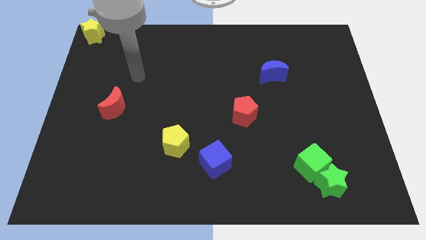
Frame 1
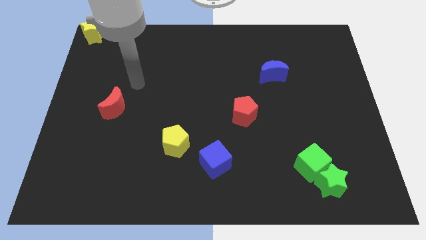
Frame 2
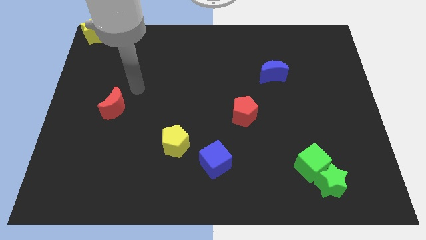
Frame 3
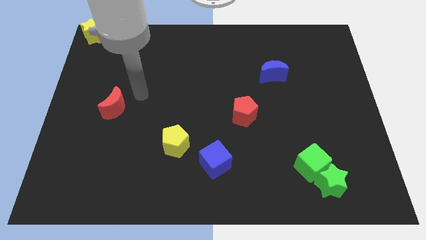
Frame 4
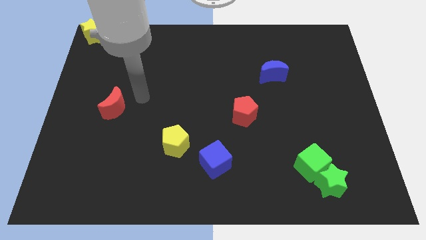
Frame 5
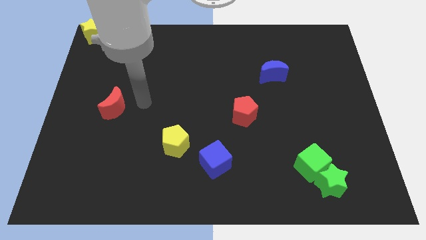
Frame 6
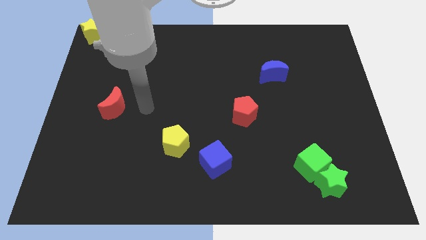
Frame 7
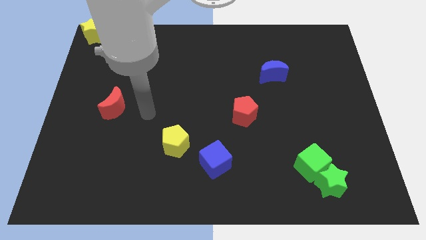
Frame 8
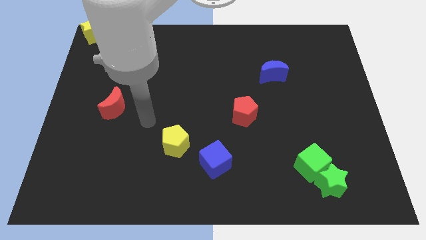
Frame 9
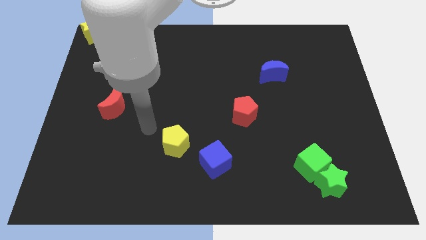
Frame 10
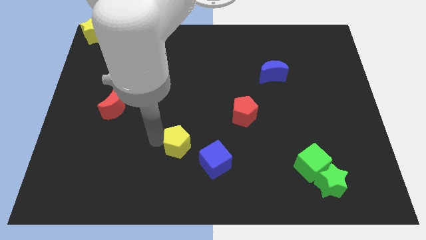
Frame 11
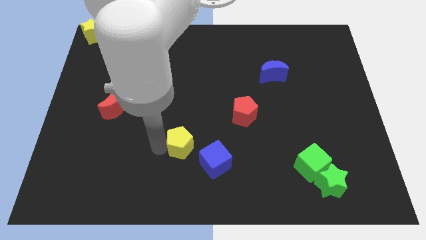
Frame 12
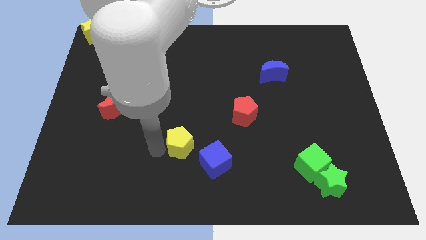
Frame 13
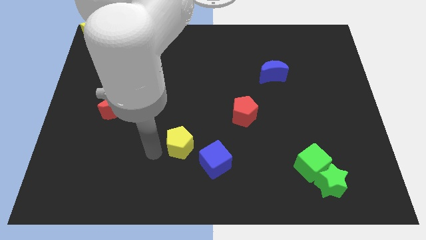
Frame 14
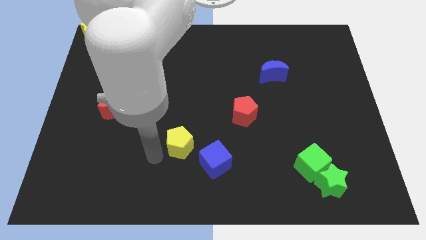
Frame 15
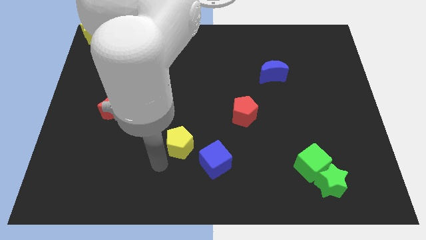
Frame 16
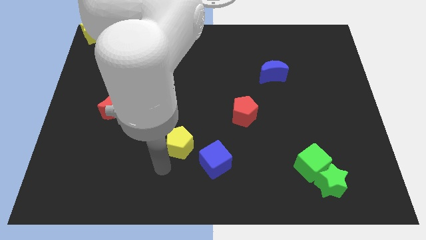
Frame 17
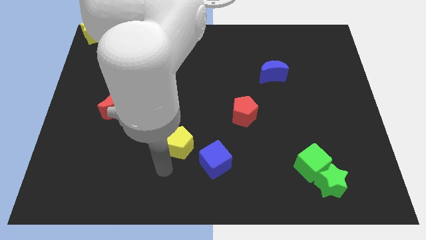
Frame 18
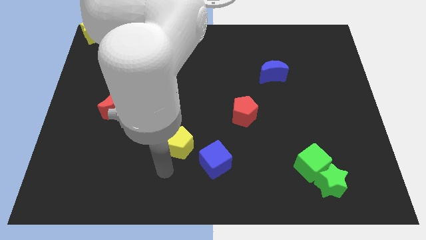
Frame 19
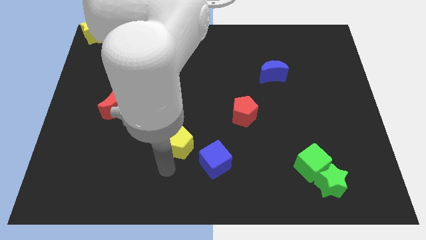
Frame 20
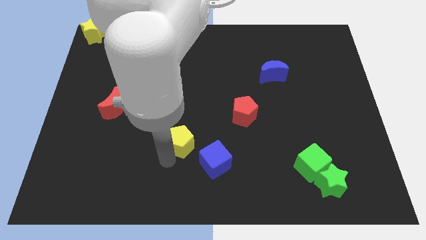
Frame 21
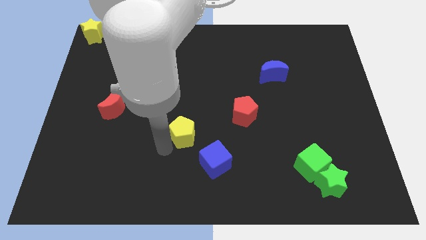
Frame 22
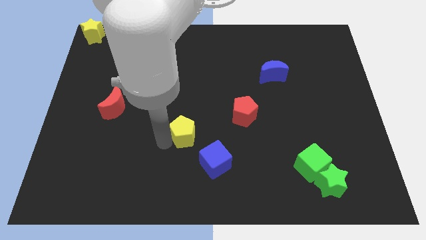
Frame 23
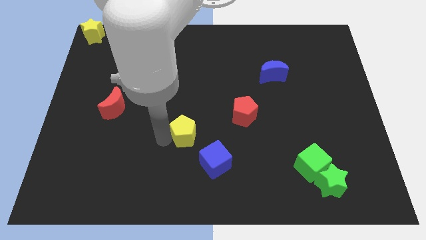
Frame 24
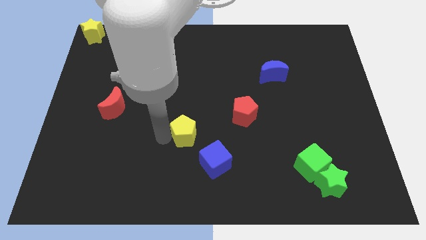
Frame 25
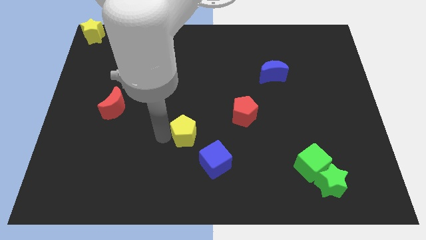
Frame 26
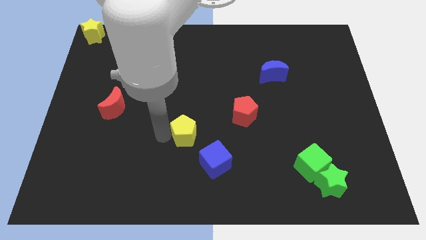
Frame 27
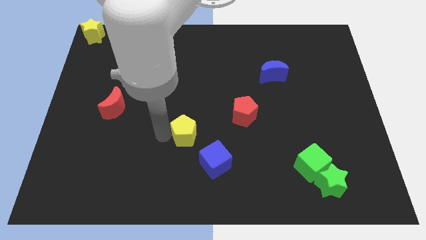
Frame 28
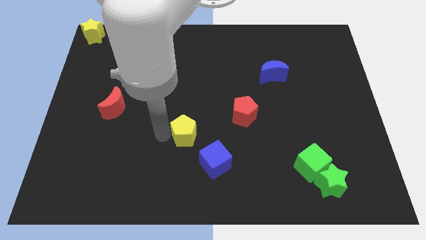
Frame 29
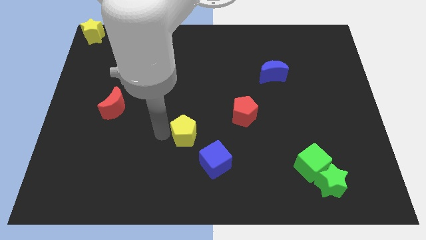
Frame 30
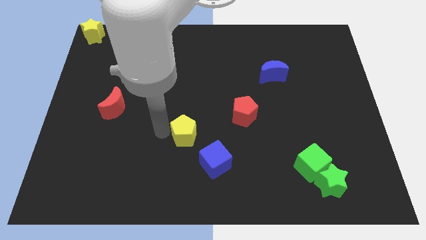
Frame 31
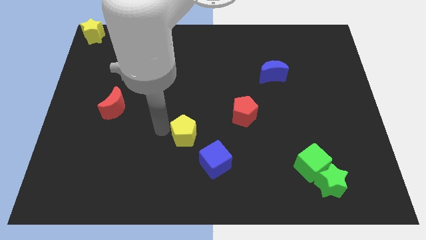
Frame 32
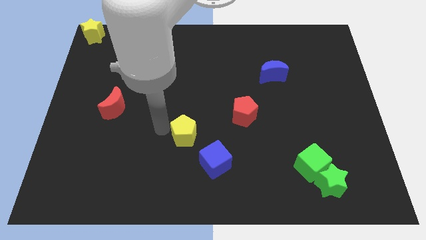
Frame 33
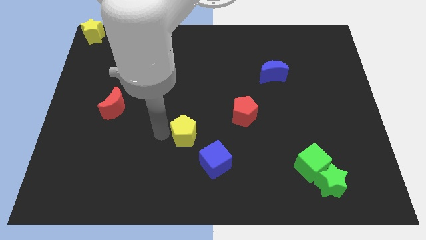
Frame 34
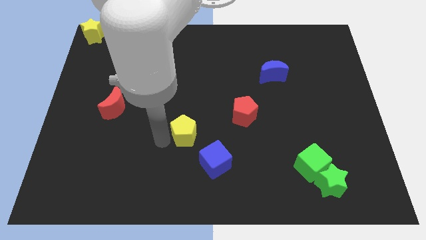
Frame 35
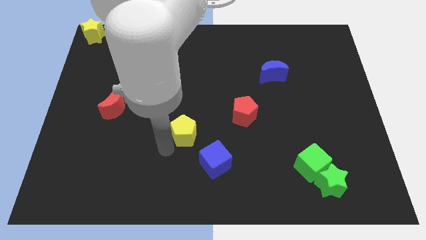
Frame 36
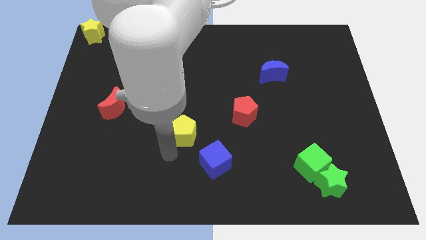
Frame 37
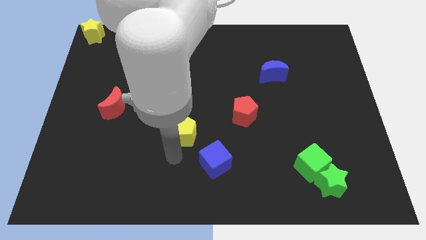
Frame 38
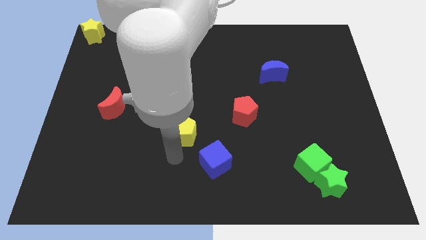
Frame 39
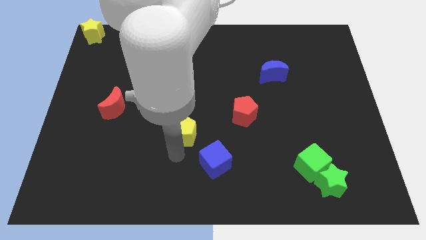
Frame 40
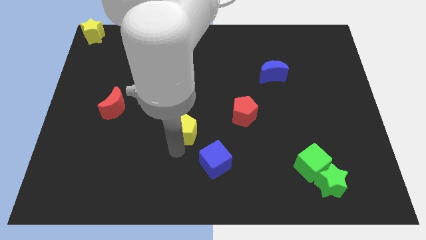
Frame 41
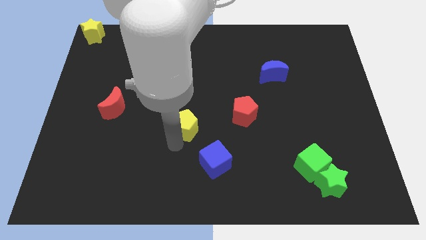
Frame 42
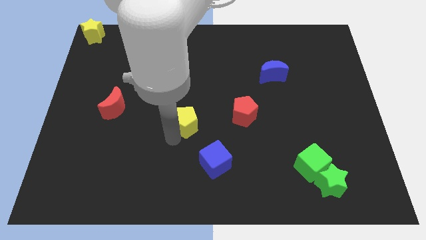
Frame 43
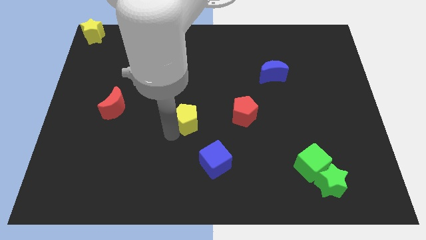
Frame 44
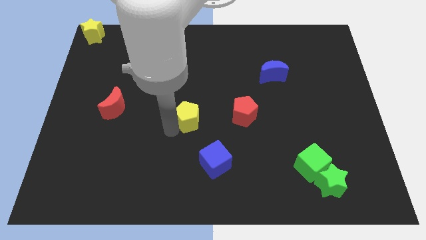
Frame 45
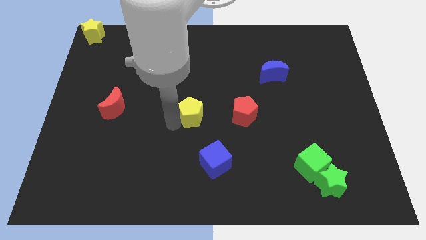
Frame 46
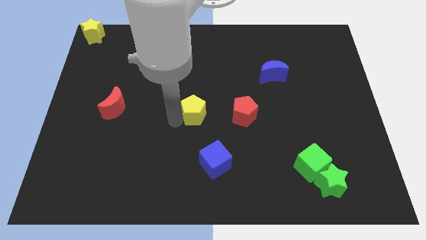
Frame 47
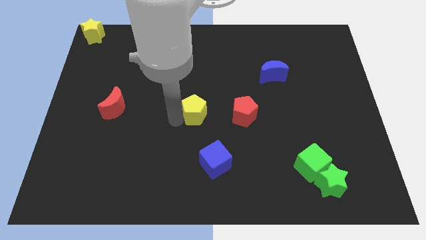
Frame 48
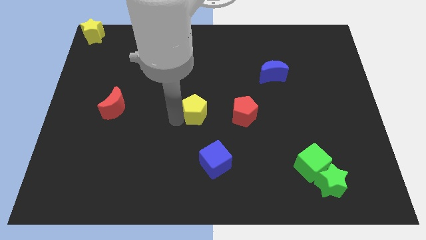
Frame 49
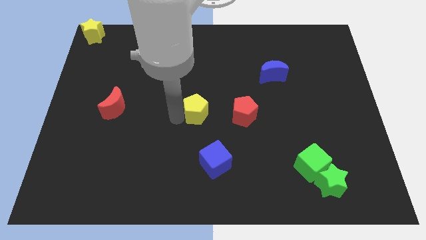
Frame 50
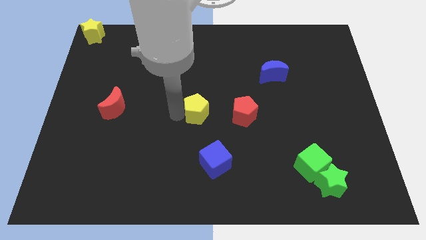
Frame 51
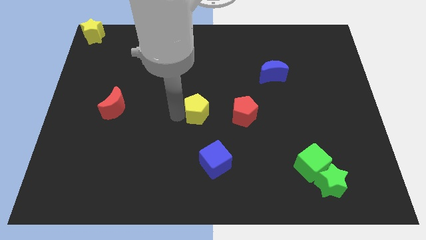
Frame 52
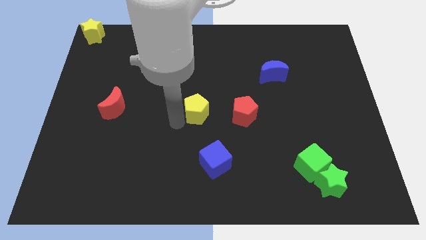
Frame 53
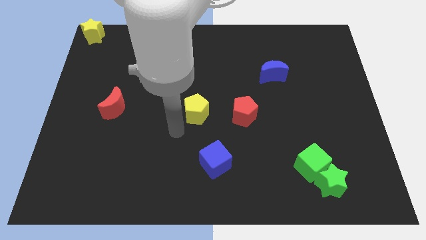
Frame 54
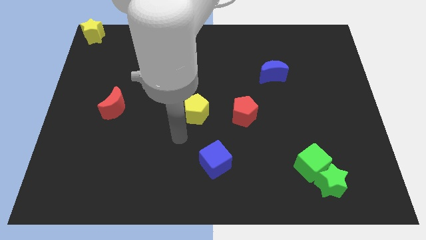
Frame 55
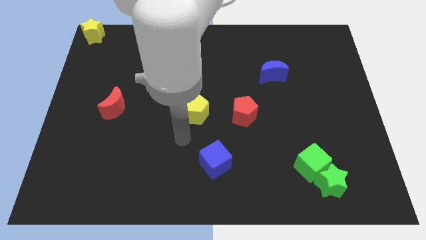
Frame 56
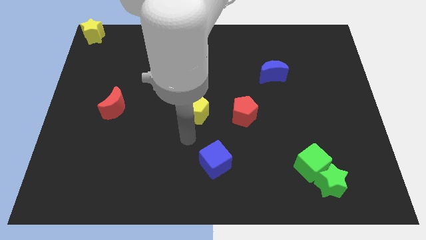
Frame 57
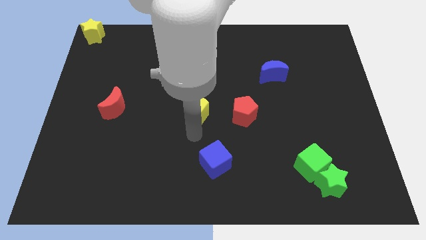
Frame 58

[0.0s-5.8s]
move the yellow pentagon to the left side of the red pentagon

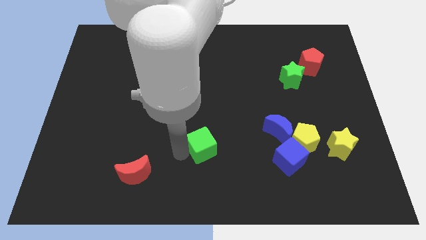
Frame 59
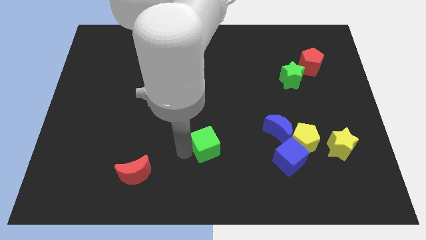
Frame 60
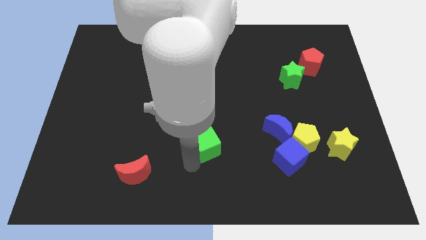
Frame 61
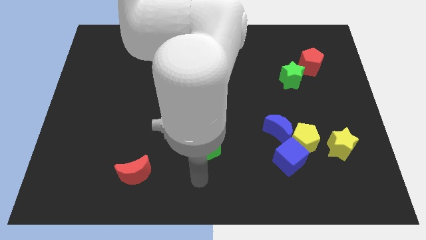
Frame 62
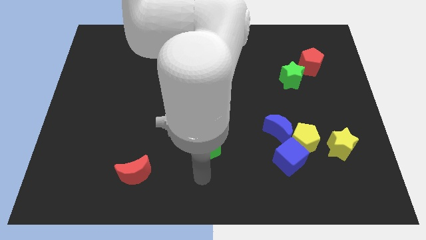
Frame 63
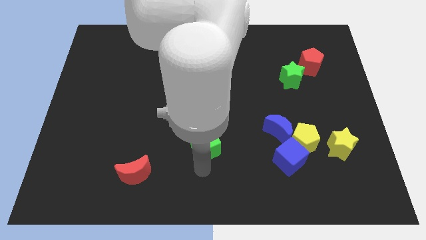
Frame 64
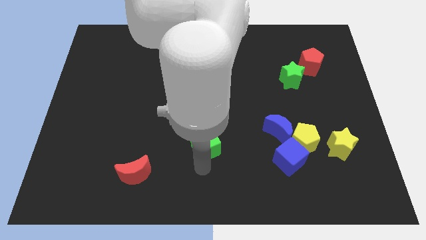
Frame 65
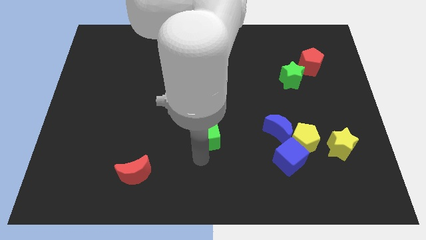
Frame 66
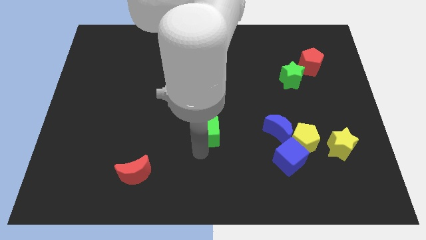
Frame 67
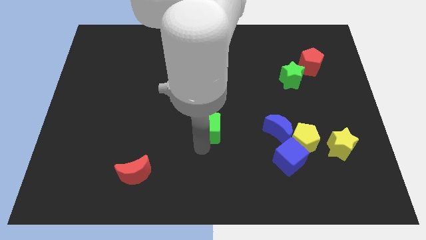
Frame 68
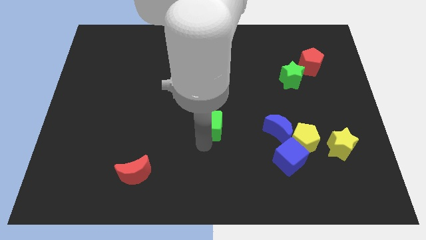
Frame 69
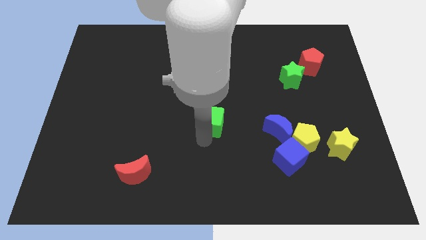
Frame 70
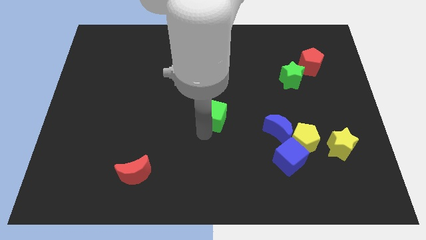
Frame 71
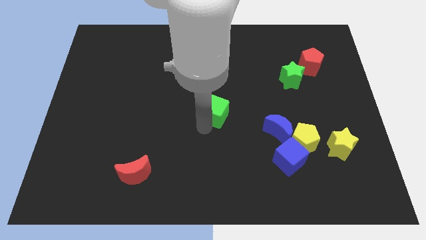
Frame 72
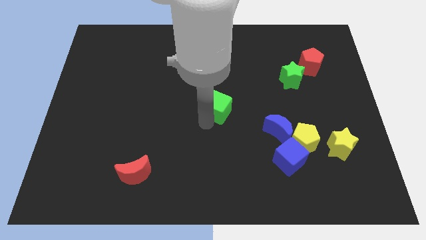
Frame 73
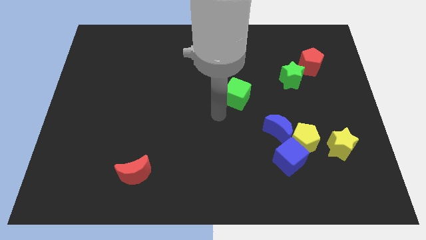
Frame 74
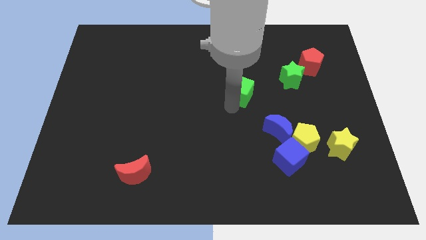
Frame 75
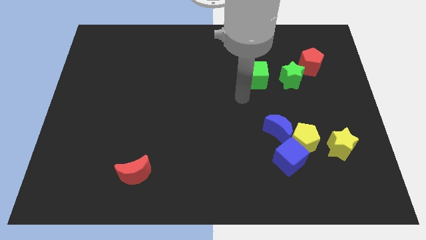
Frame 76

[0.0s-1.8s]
move the green cube horizontal parallel to the green star

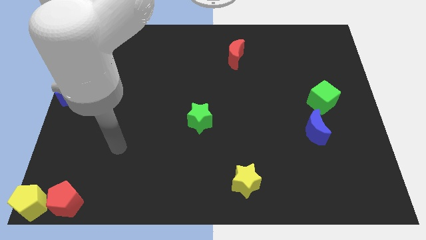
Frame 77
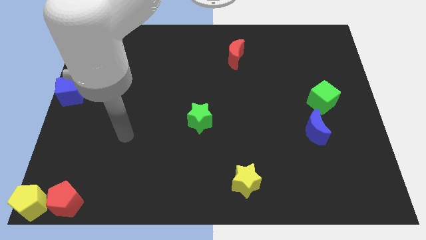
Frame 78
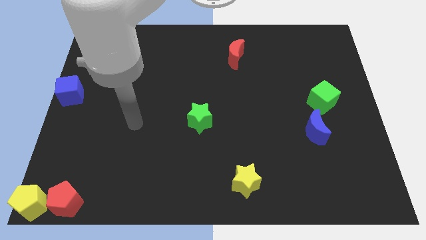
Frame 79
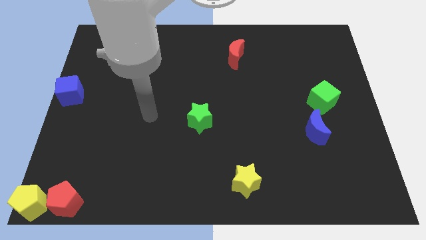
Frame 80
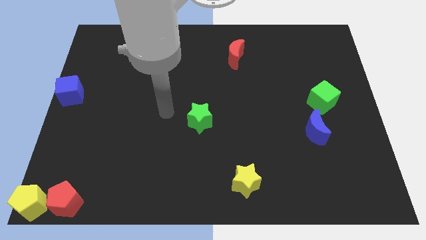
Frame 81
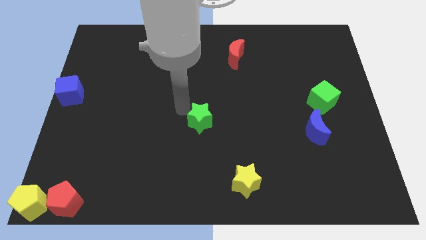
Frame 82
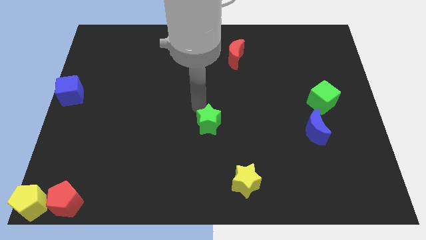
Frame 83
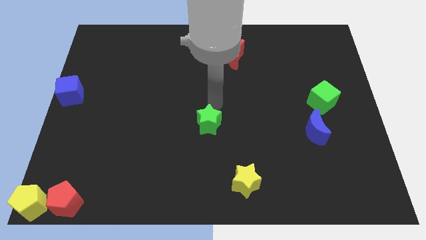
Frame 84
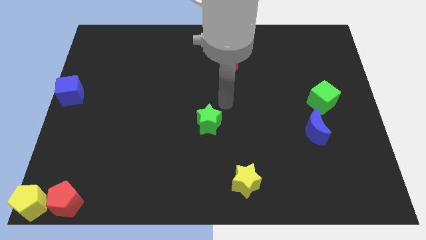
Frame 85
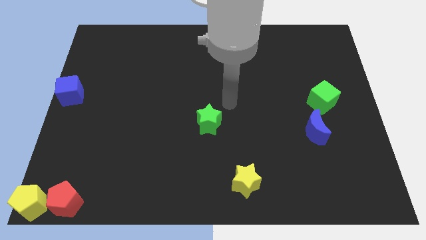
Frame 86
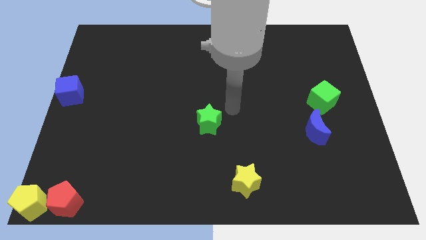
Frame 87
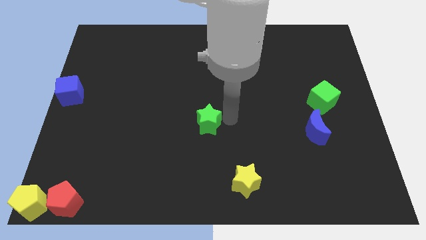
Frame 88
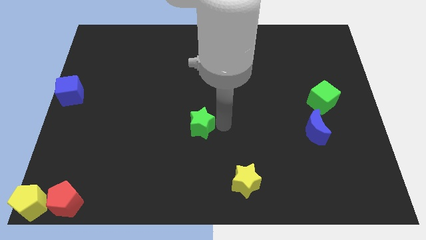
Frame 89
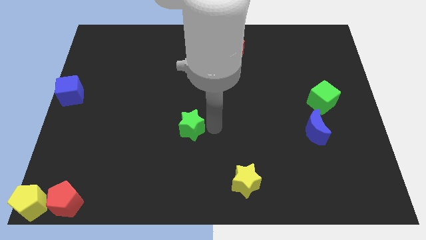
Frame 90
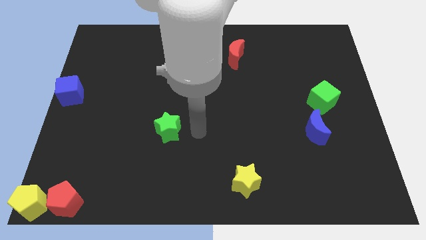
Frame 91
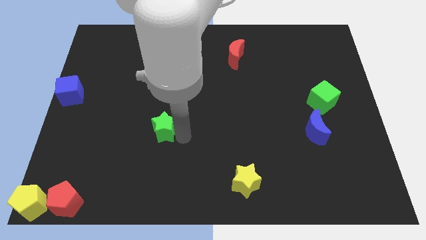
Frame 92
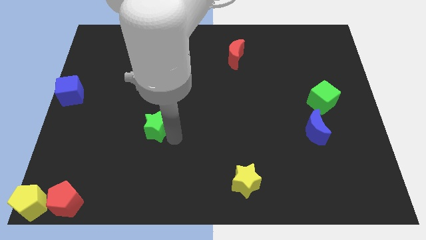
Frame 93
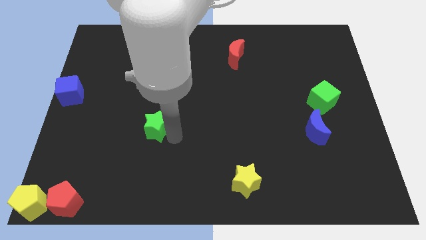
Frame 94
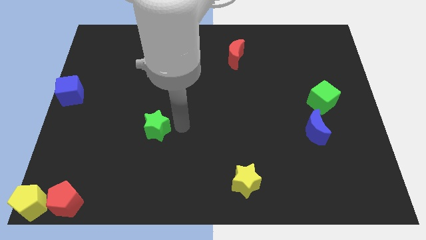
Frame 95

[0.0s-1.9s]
move the green star towards left
